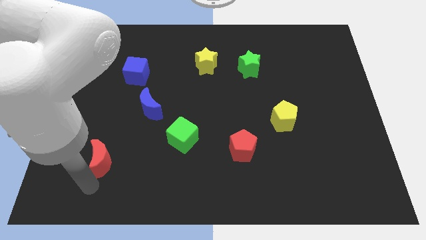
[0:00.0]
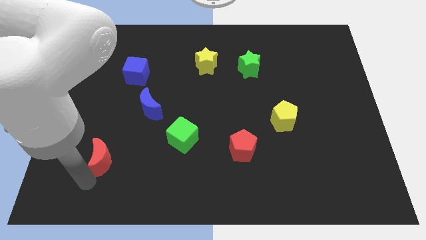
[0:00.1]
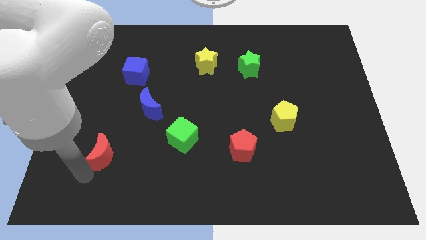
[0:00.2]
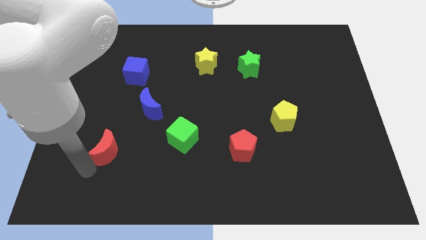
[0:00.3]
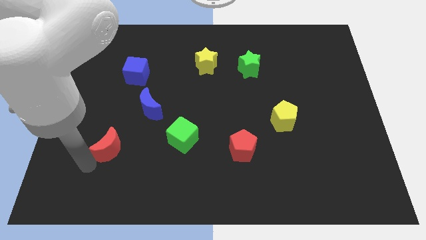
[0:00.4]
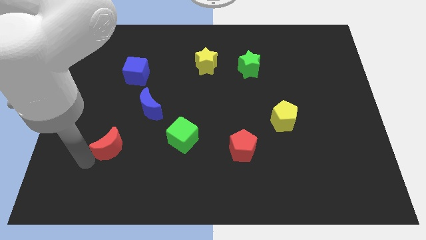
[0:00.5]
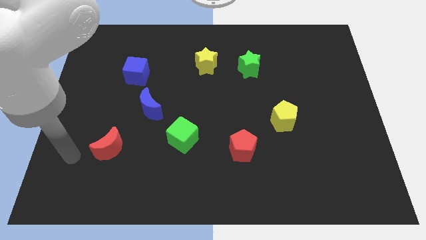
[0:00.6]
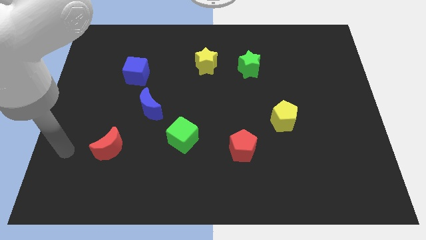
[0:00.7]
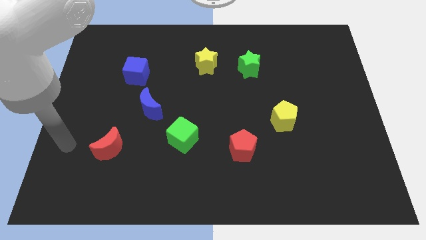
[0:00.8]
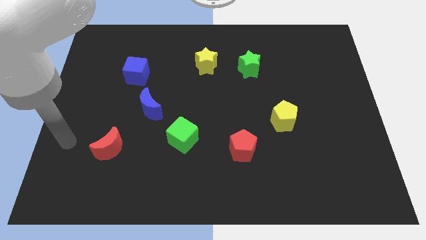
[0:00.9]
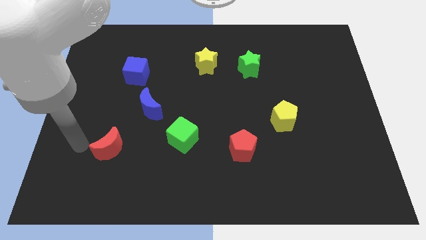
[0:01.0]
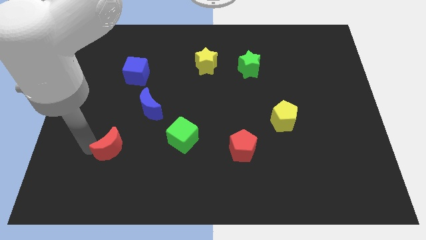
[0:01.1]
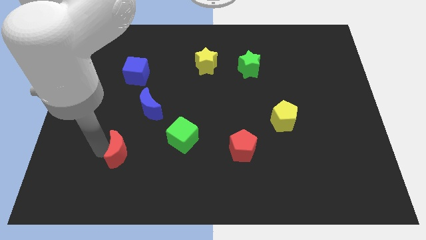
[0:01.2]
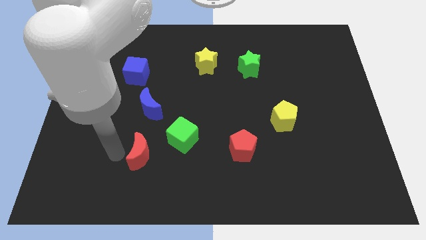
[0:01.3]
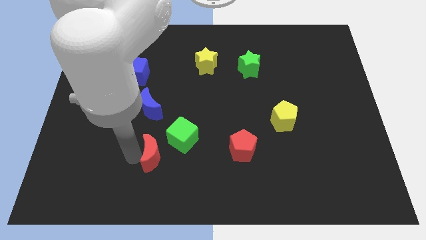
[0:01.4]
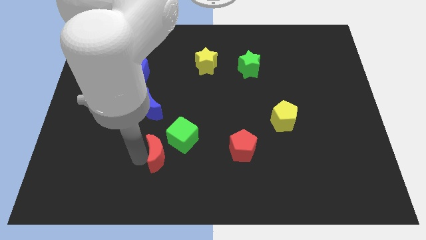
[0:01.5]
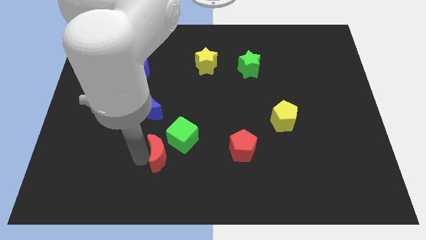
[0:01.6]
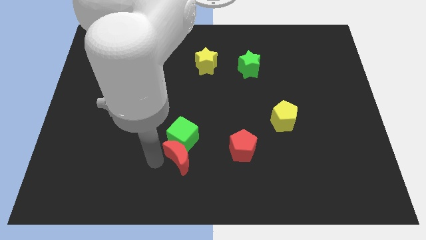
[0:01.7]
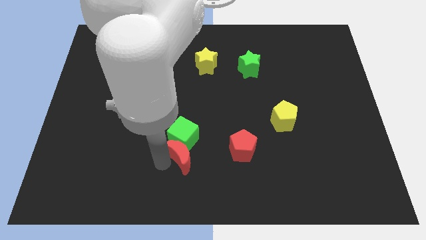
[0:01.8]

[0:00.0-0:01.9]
push the red moon into the green cube

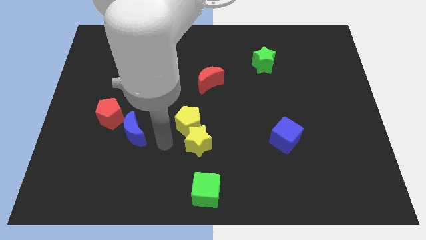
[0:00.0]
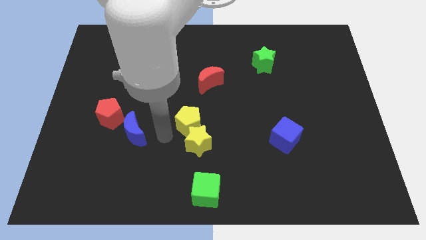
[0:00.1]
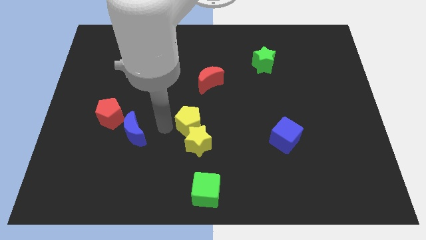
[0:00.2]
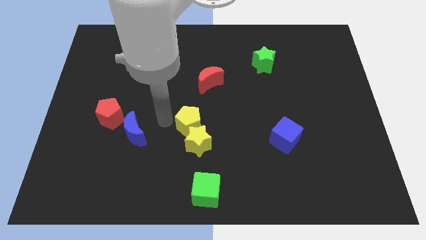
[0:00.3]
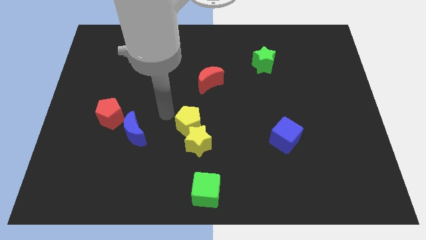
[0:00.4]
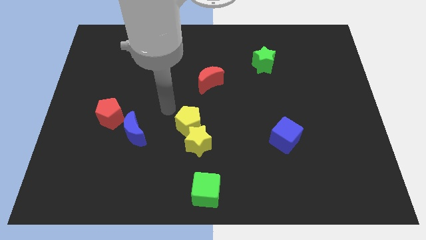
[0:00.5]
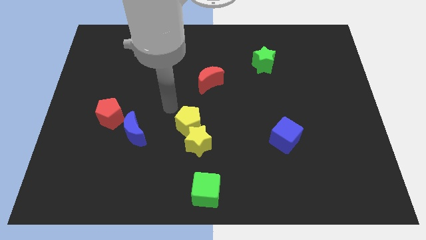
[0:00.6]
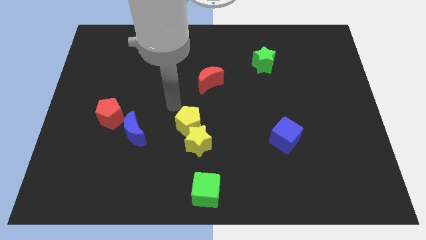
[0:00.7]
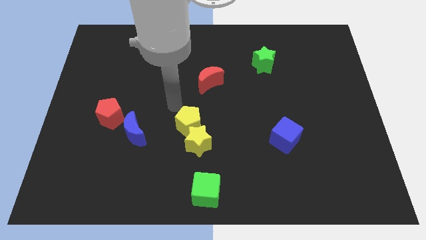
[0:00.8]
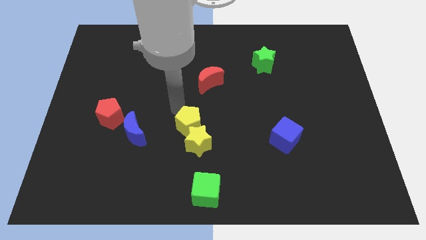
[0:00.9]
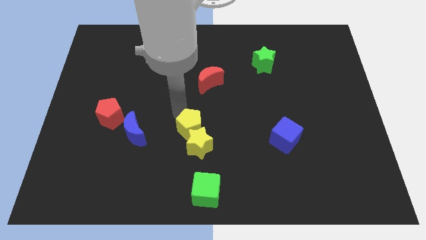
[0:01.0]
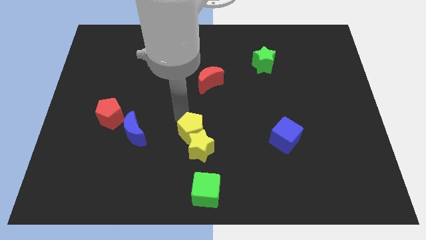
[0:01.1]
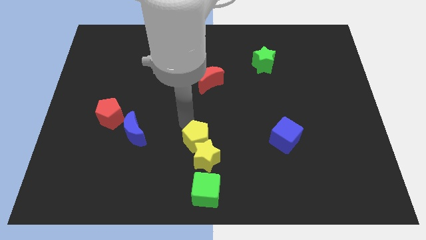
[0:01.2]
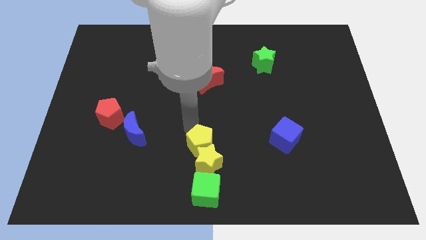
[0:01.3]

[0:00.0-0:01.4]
move yellow pentagon along with yellow star above to the green cube

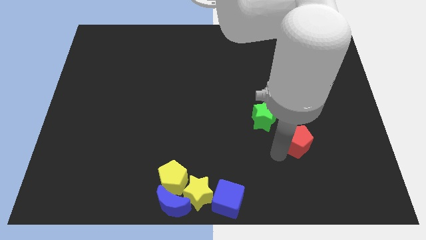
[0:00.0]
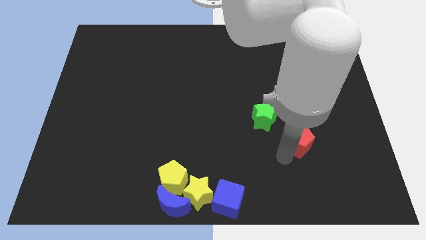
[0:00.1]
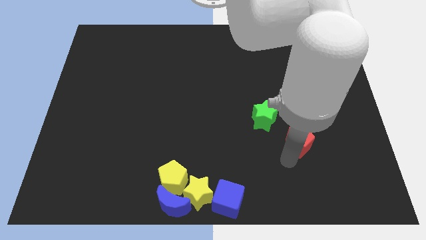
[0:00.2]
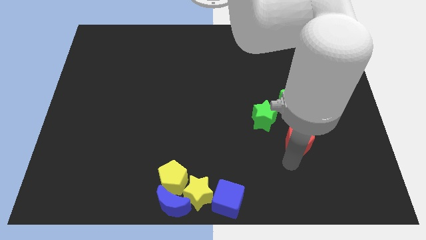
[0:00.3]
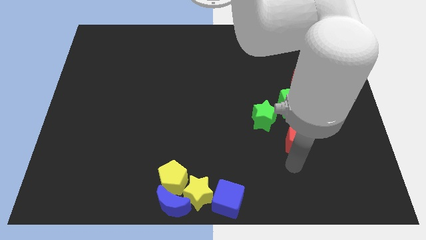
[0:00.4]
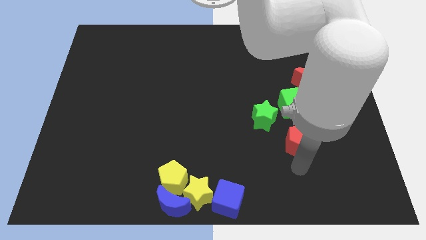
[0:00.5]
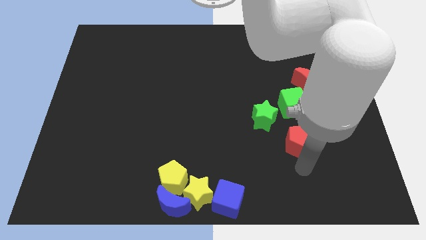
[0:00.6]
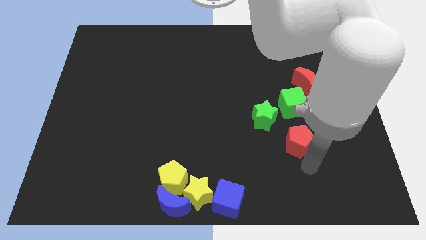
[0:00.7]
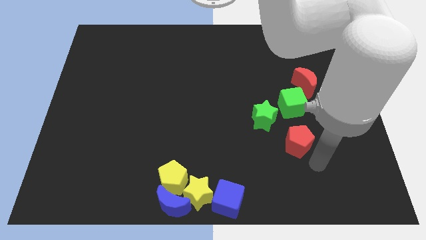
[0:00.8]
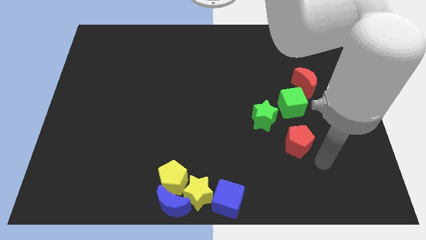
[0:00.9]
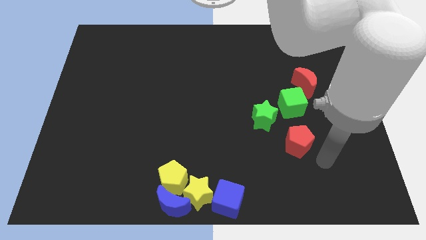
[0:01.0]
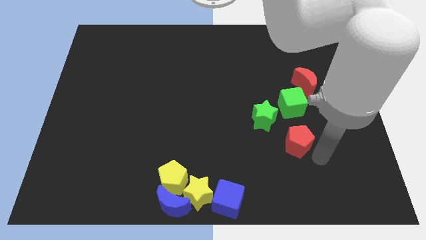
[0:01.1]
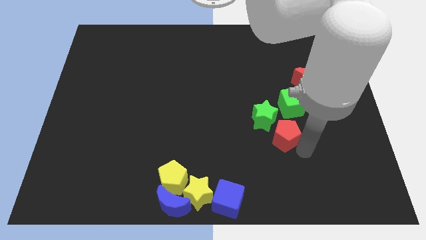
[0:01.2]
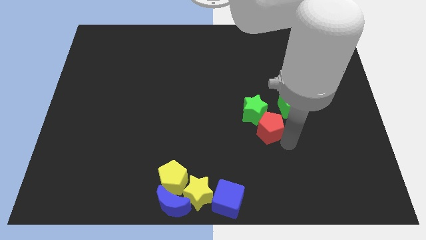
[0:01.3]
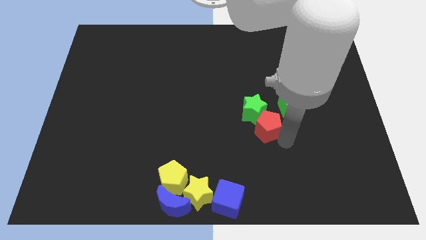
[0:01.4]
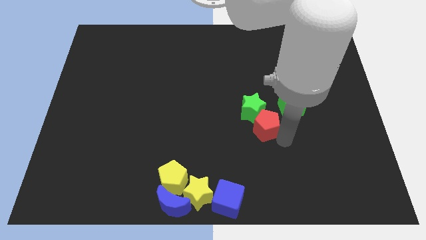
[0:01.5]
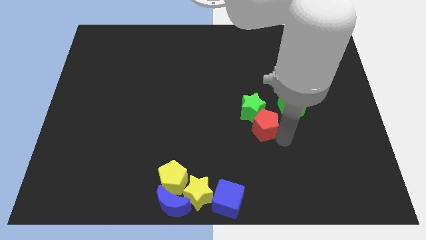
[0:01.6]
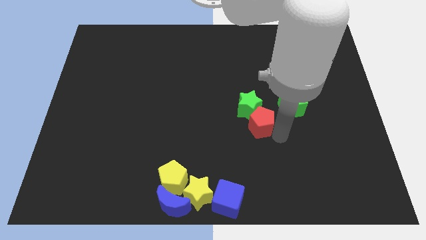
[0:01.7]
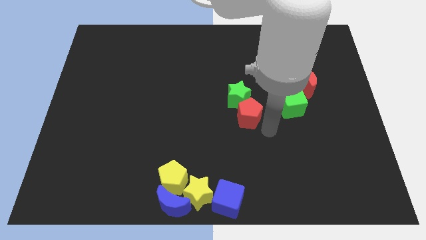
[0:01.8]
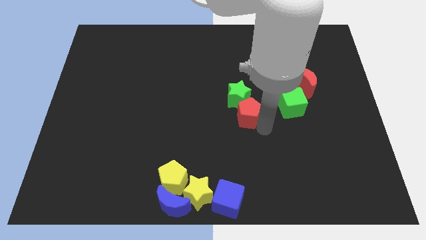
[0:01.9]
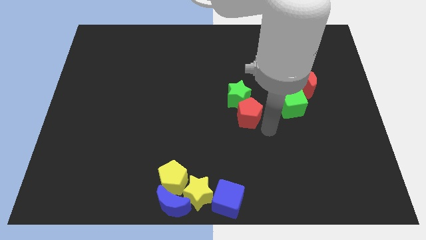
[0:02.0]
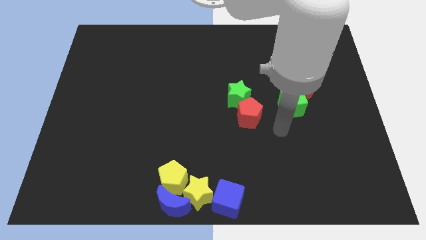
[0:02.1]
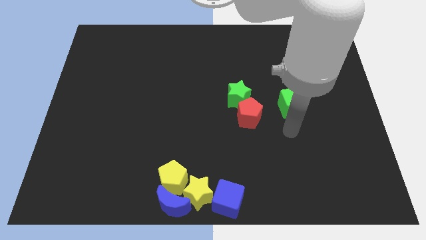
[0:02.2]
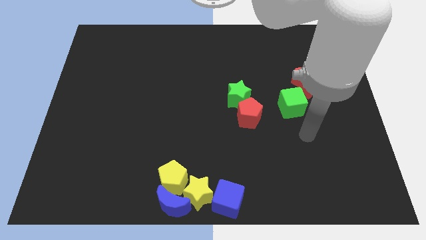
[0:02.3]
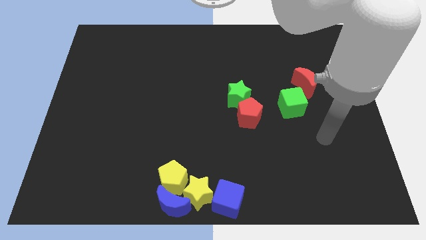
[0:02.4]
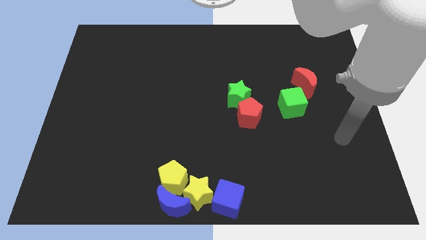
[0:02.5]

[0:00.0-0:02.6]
move red pentagon into the green star

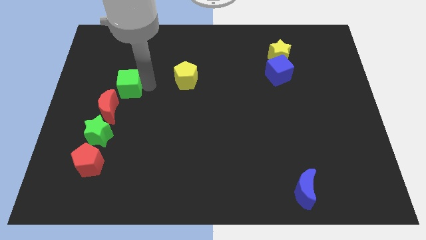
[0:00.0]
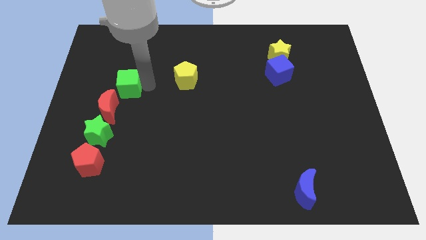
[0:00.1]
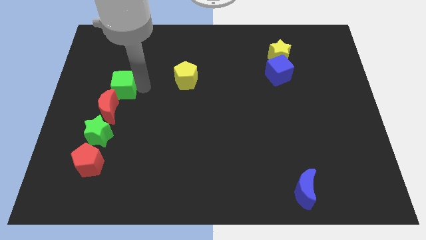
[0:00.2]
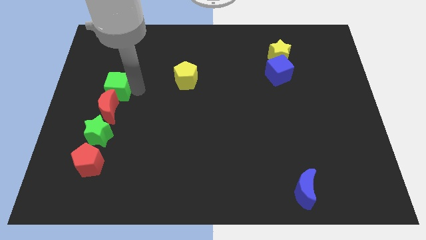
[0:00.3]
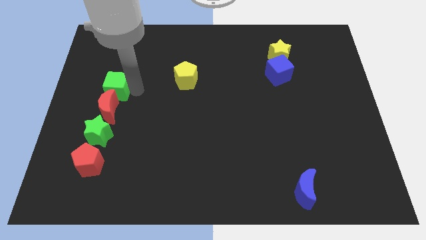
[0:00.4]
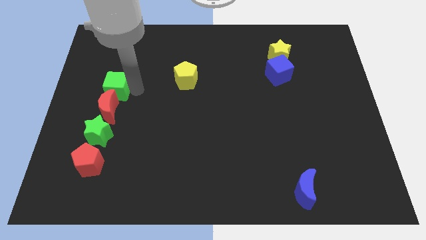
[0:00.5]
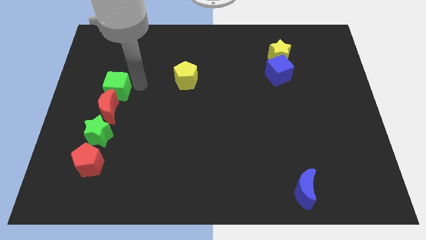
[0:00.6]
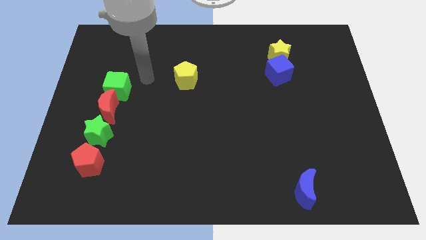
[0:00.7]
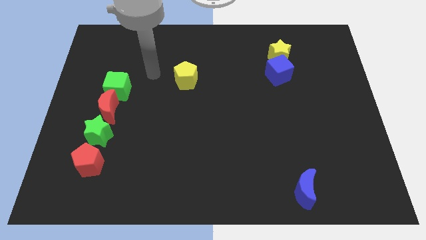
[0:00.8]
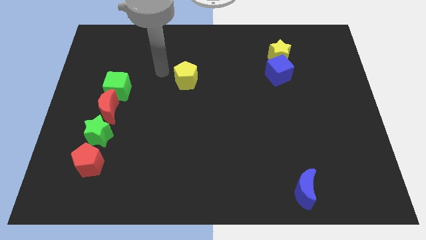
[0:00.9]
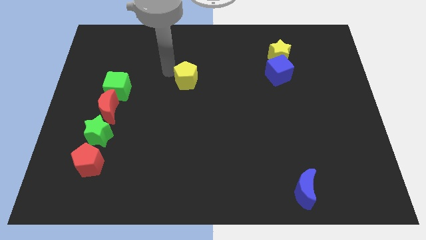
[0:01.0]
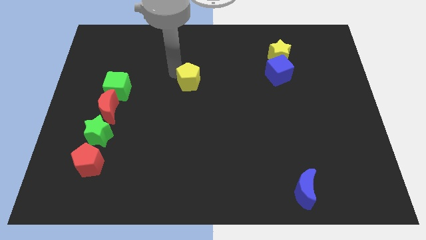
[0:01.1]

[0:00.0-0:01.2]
move your arm to the top left to the yellow pentagon

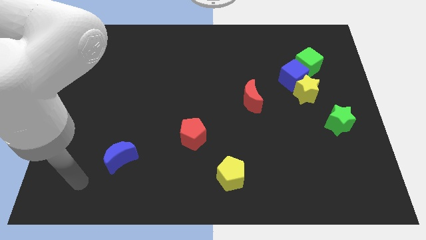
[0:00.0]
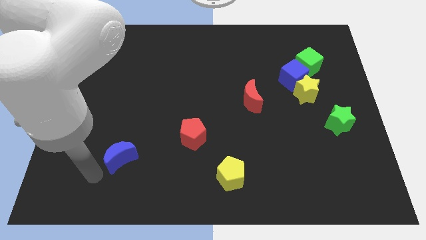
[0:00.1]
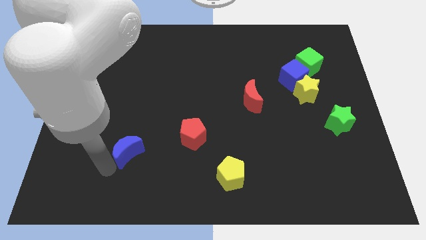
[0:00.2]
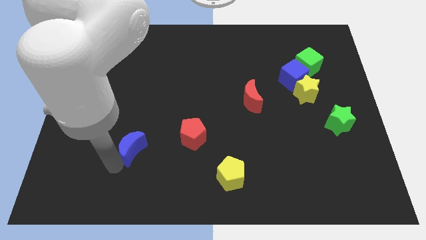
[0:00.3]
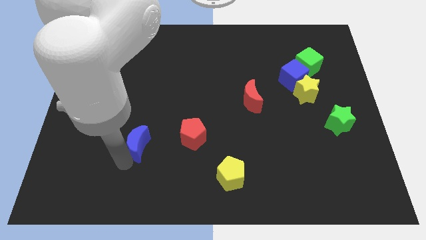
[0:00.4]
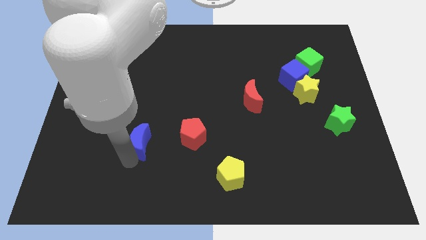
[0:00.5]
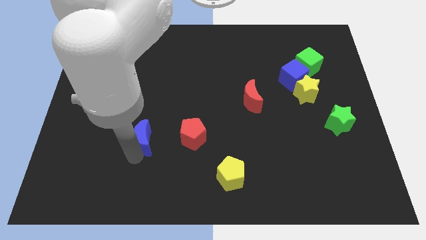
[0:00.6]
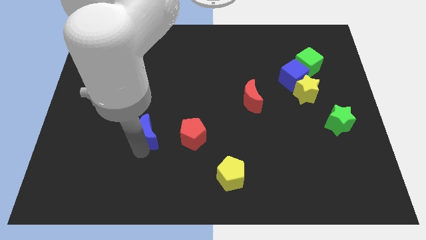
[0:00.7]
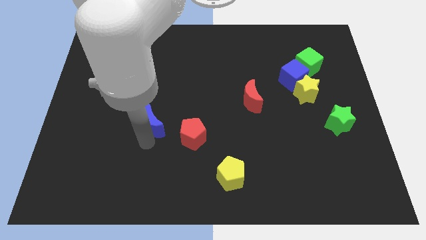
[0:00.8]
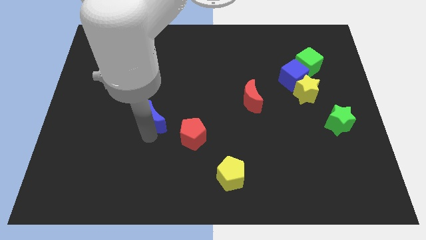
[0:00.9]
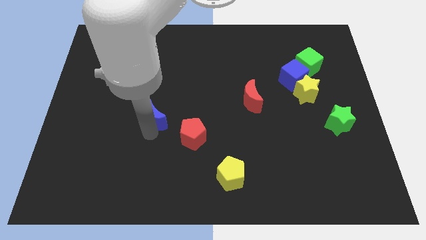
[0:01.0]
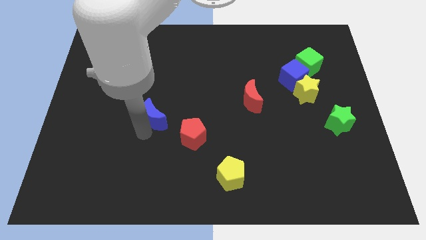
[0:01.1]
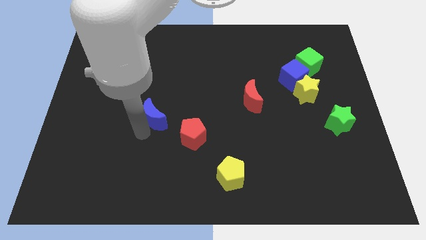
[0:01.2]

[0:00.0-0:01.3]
move the blue crescent to the top left diagonal to the red pentagon

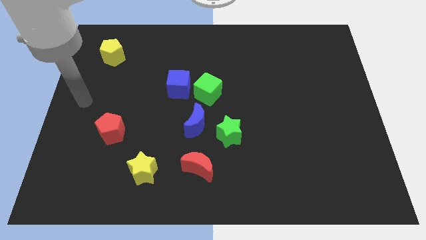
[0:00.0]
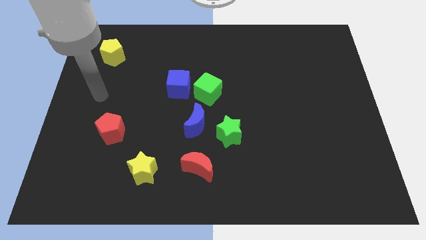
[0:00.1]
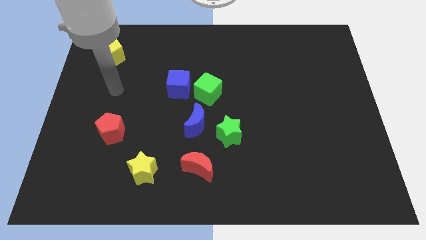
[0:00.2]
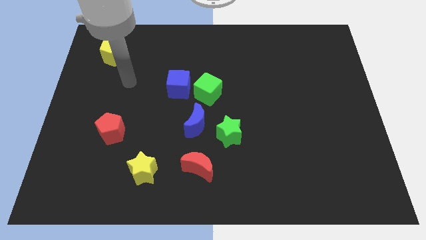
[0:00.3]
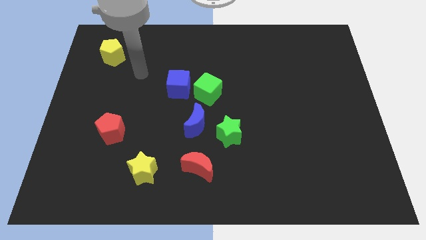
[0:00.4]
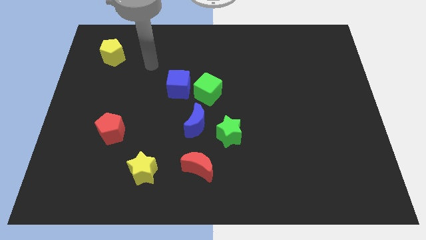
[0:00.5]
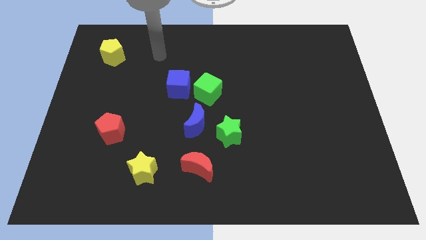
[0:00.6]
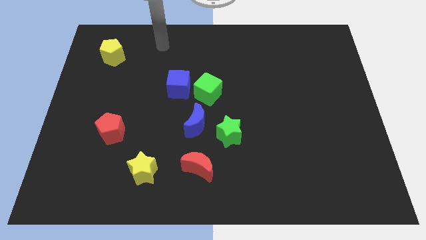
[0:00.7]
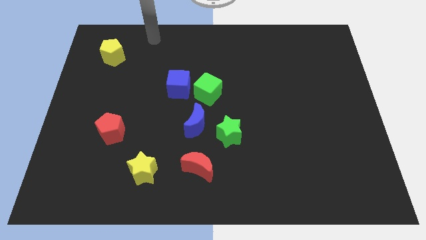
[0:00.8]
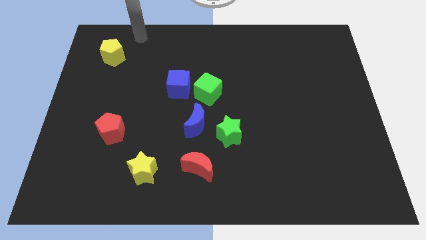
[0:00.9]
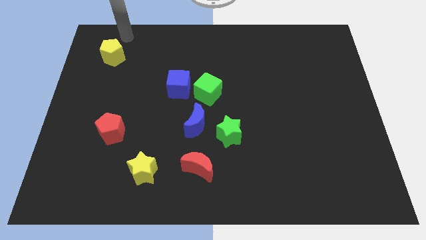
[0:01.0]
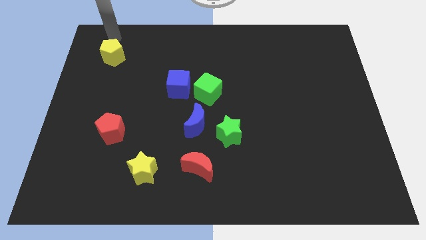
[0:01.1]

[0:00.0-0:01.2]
go near the yellow pentagon
